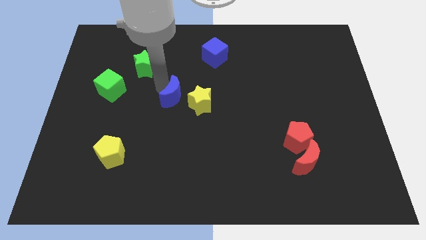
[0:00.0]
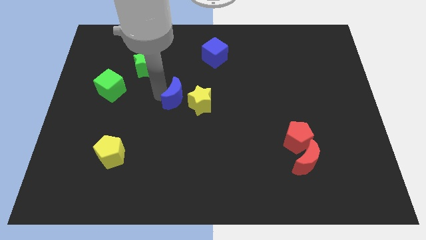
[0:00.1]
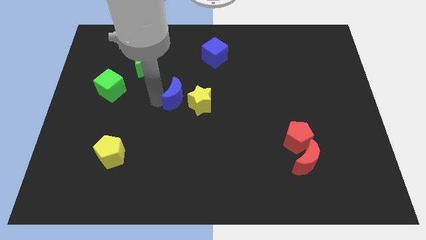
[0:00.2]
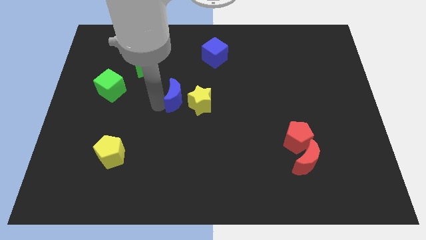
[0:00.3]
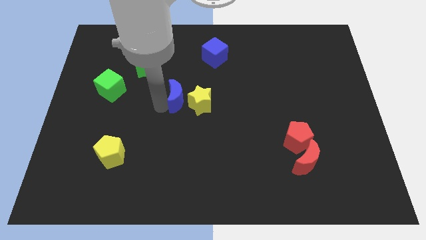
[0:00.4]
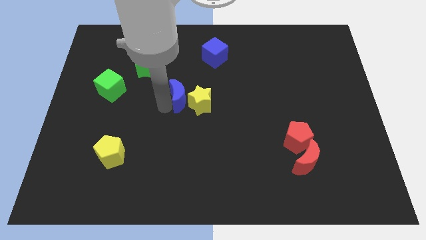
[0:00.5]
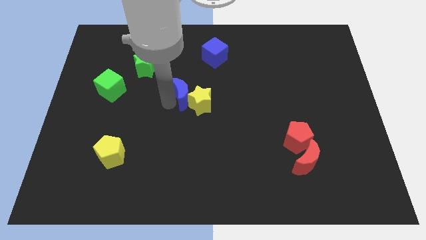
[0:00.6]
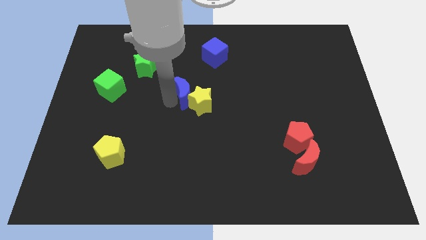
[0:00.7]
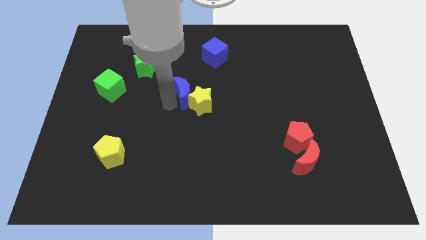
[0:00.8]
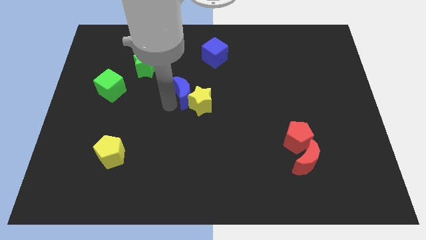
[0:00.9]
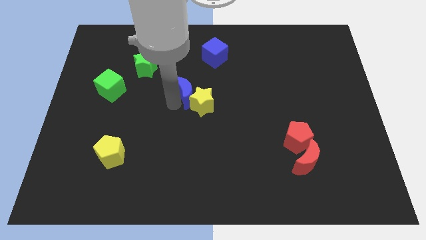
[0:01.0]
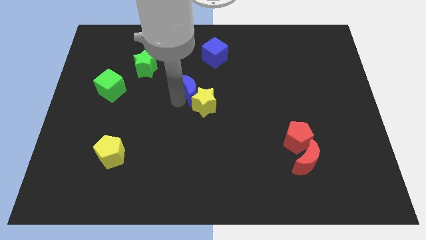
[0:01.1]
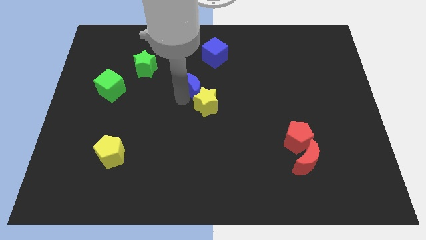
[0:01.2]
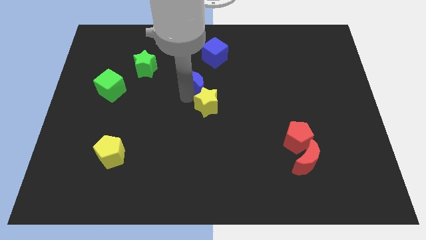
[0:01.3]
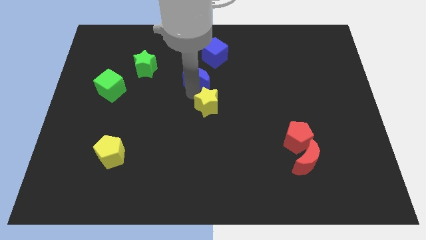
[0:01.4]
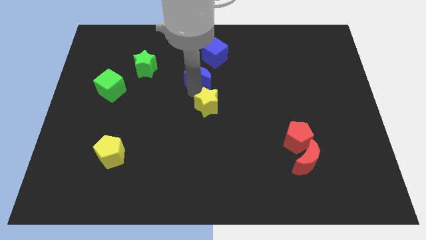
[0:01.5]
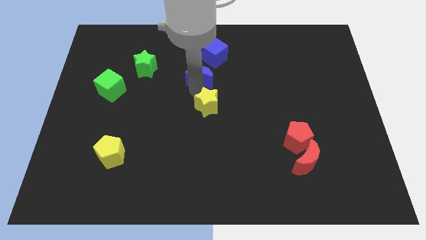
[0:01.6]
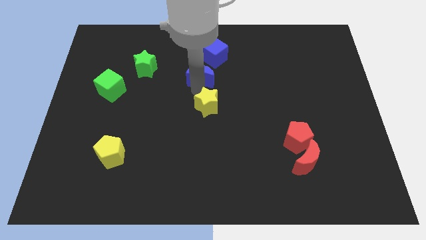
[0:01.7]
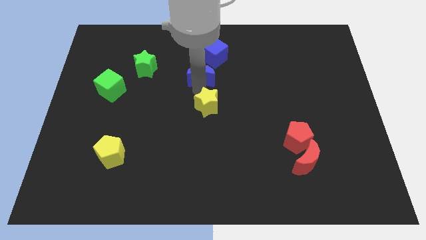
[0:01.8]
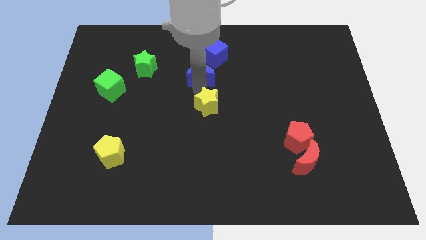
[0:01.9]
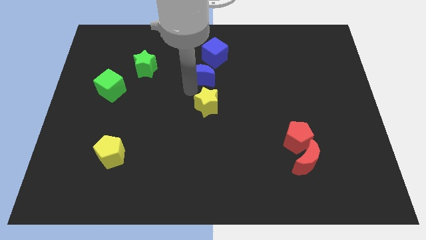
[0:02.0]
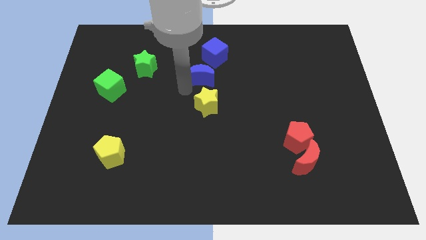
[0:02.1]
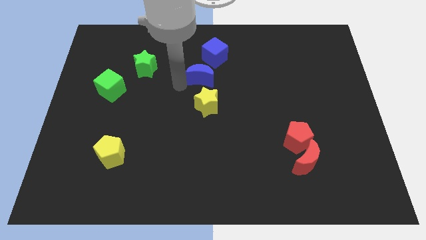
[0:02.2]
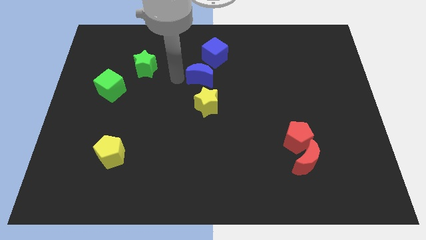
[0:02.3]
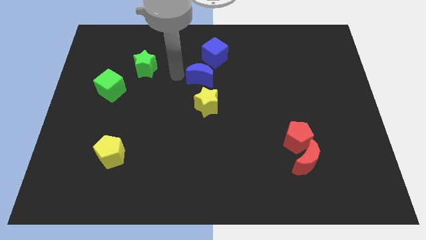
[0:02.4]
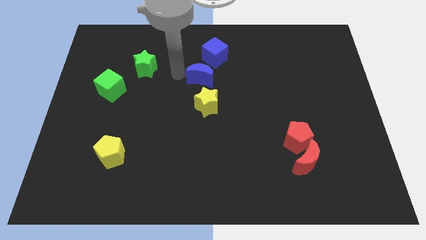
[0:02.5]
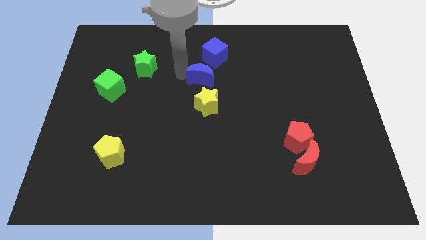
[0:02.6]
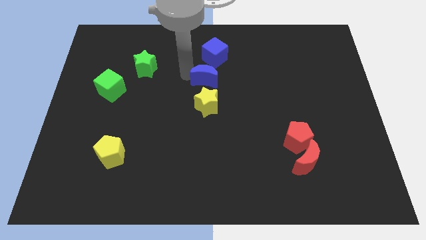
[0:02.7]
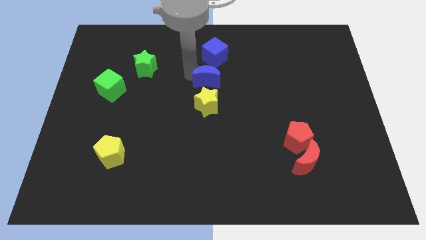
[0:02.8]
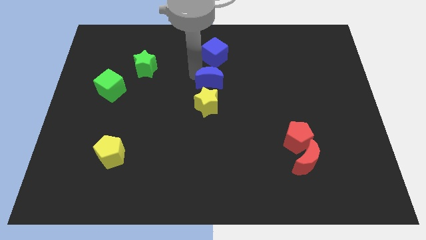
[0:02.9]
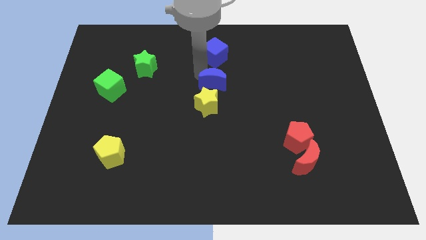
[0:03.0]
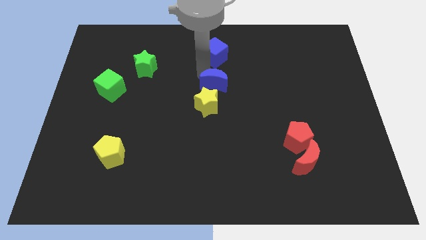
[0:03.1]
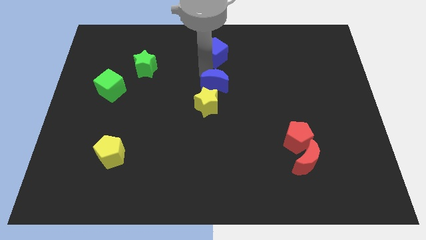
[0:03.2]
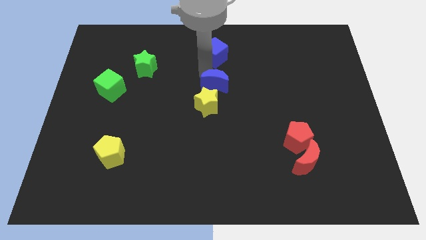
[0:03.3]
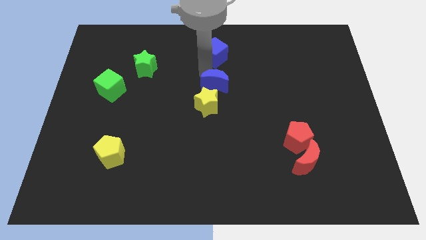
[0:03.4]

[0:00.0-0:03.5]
place the blue crescent between the blue cube and yellow star

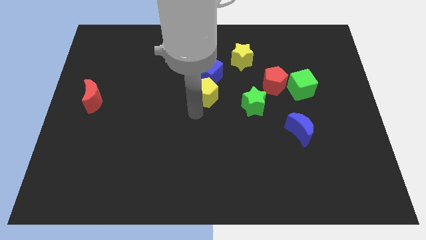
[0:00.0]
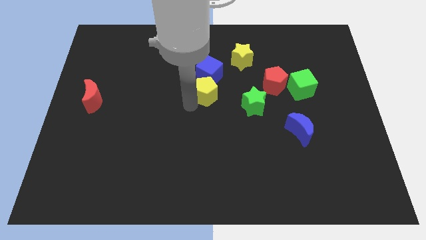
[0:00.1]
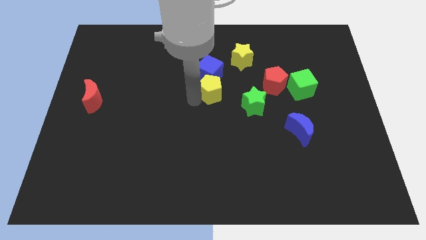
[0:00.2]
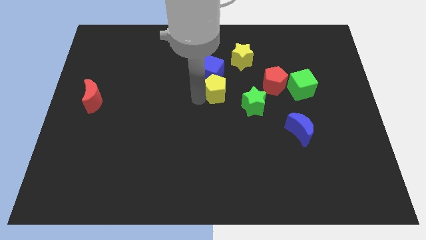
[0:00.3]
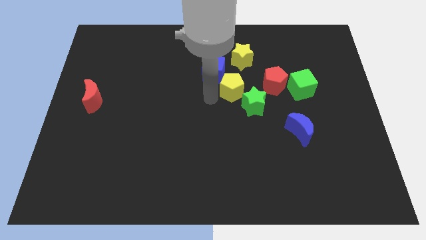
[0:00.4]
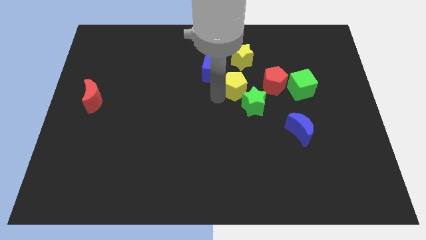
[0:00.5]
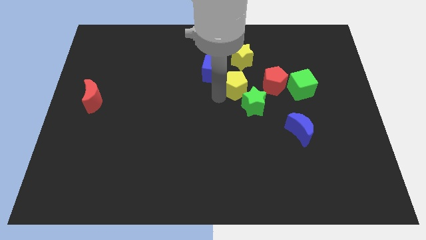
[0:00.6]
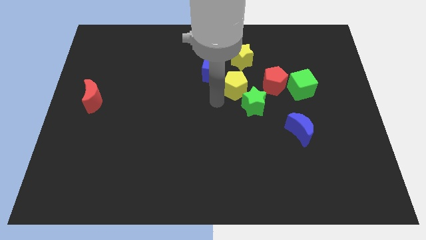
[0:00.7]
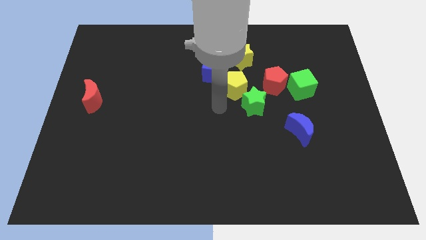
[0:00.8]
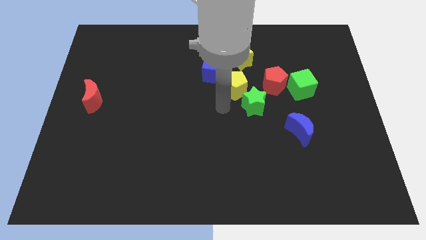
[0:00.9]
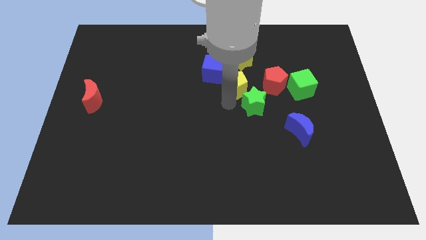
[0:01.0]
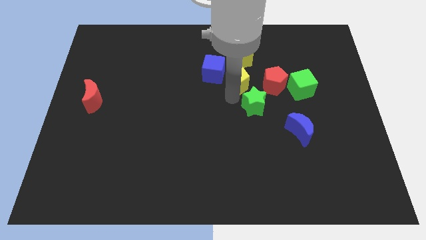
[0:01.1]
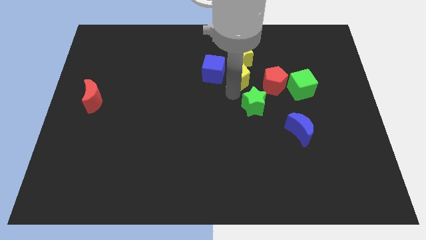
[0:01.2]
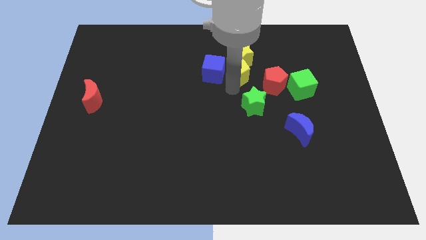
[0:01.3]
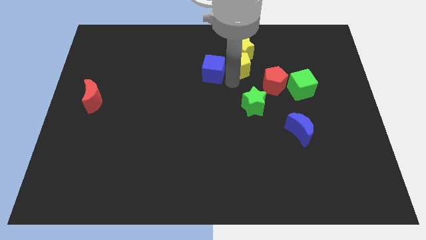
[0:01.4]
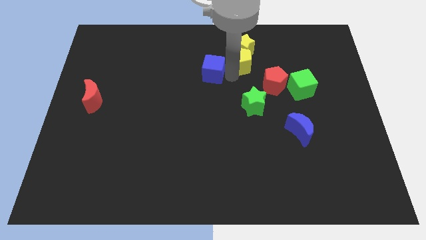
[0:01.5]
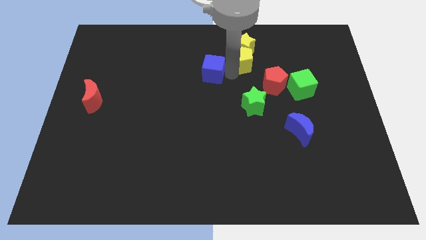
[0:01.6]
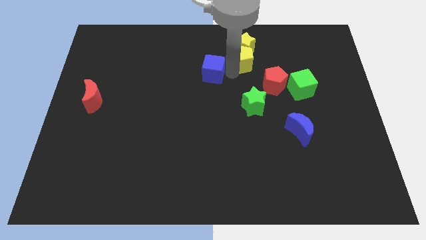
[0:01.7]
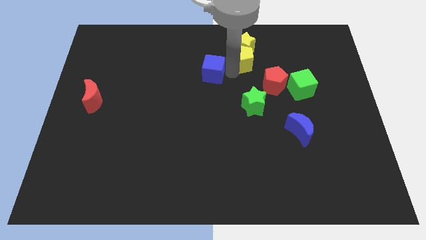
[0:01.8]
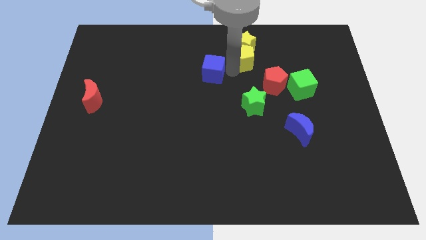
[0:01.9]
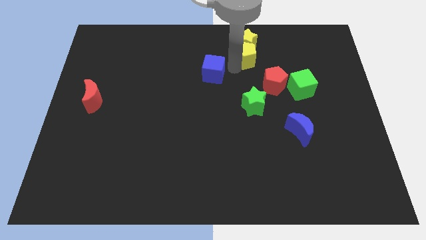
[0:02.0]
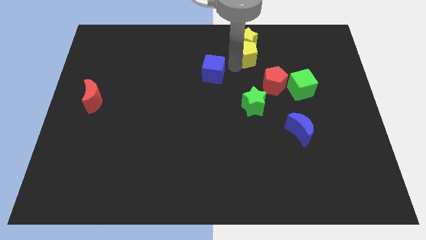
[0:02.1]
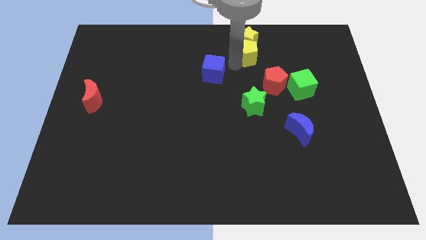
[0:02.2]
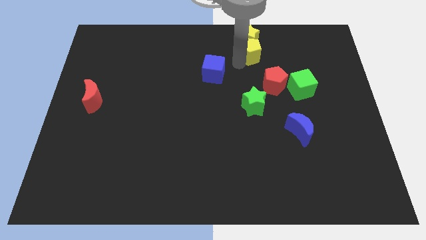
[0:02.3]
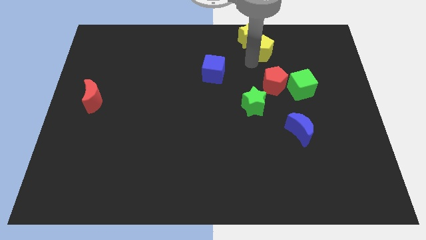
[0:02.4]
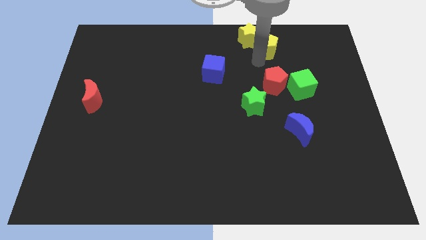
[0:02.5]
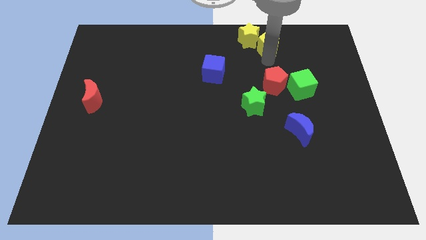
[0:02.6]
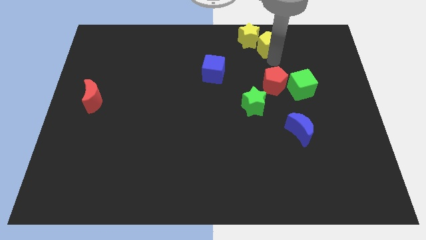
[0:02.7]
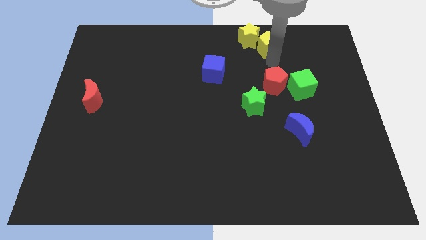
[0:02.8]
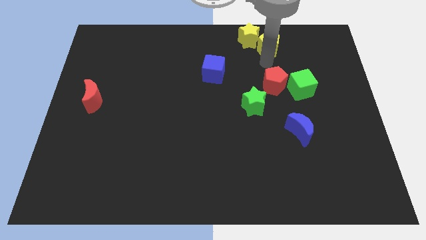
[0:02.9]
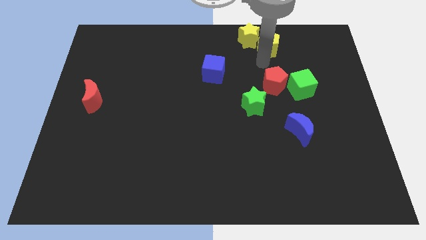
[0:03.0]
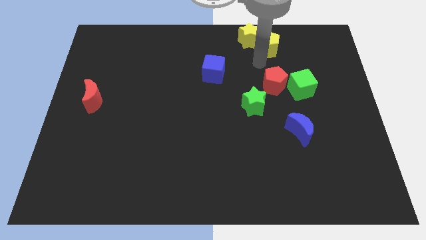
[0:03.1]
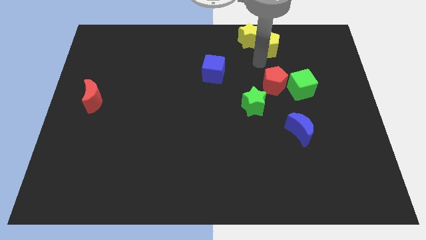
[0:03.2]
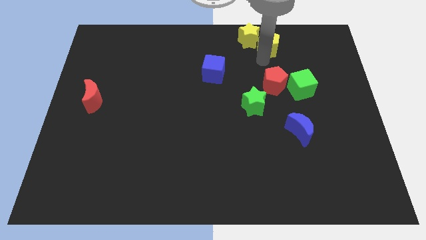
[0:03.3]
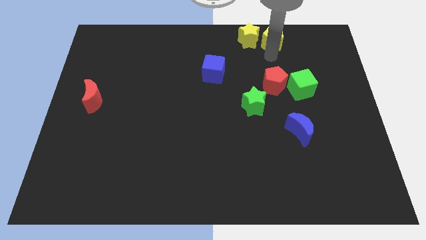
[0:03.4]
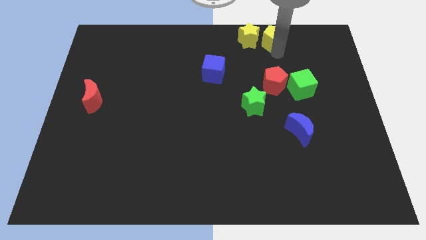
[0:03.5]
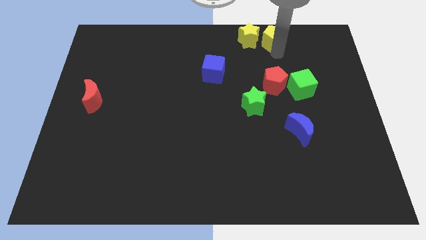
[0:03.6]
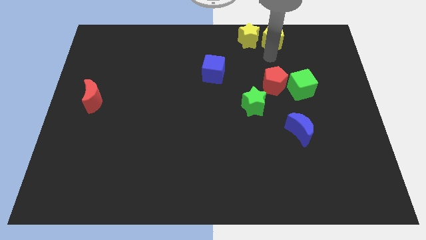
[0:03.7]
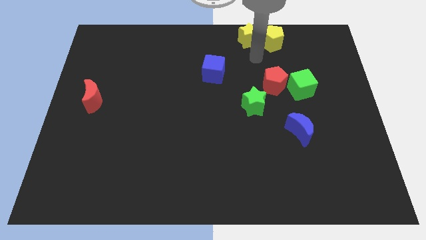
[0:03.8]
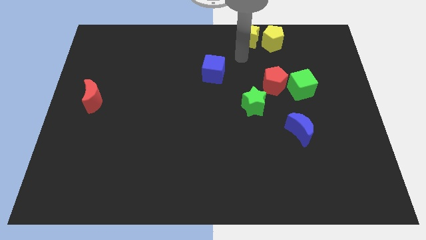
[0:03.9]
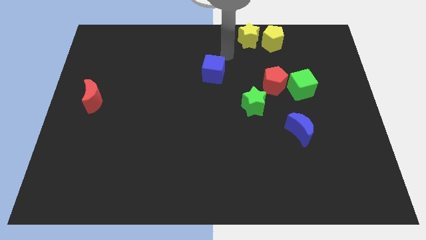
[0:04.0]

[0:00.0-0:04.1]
place the yellow pentagon to the right of the yellow star

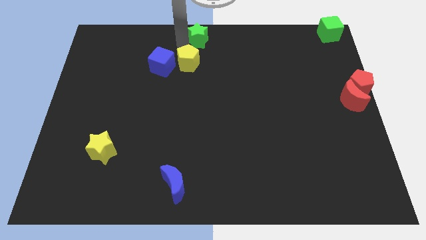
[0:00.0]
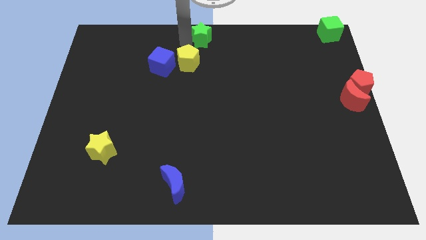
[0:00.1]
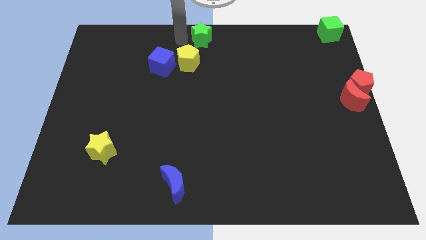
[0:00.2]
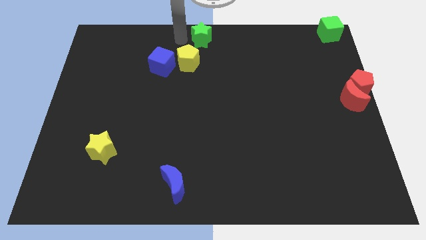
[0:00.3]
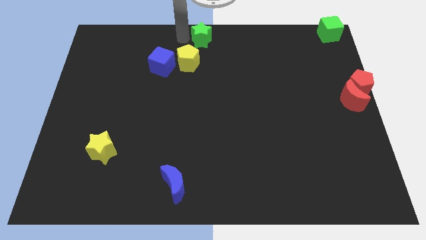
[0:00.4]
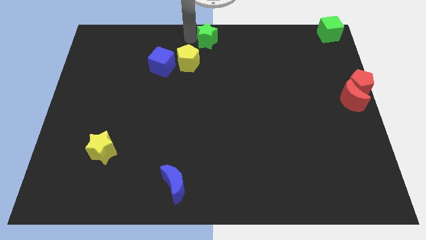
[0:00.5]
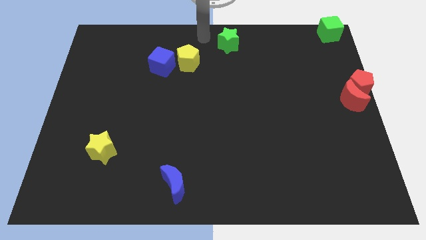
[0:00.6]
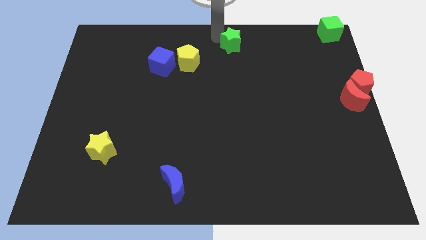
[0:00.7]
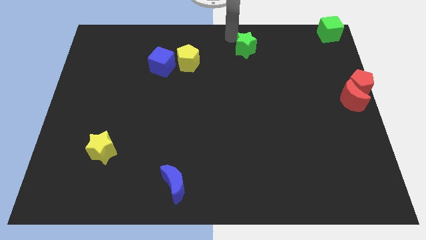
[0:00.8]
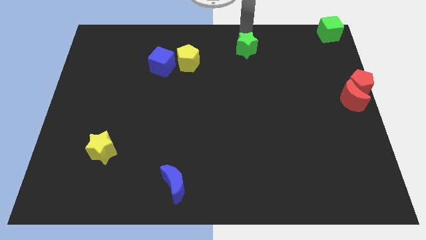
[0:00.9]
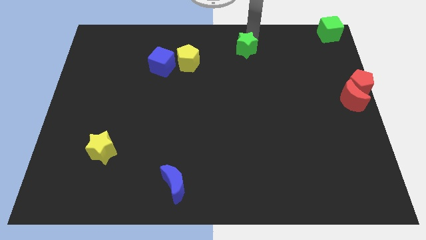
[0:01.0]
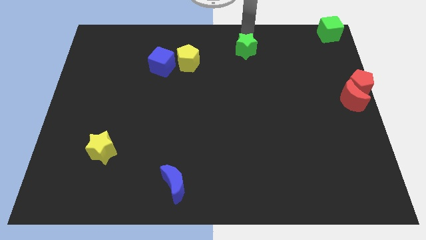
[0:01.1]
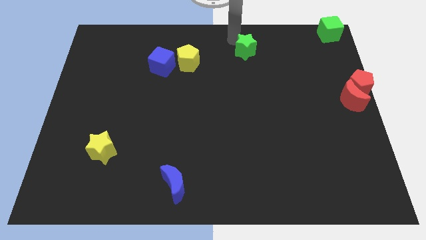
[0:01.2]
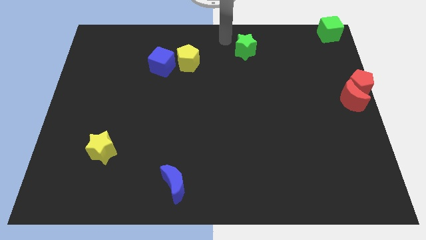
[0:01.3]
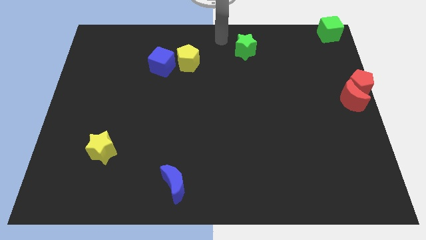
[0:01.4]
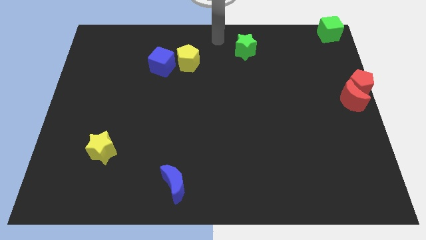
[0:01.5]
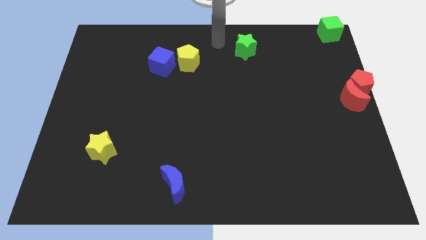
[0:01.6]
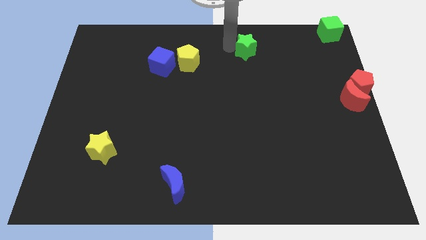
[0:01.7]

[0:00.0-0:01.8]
move the green star to the right side of the board
